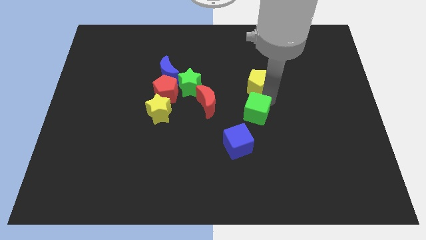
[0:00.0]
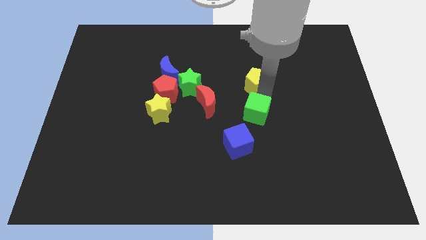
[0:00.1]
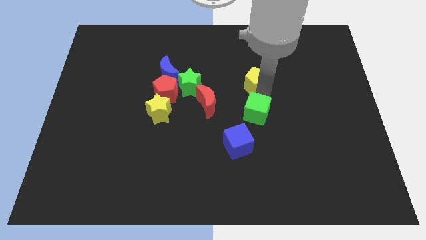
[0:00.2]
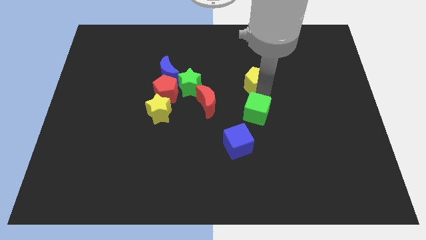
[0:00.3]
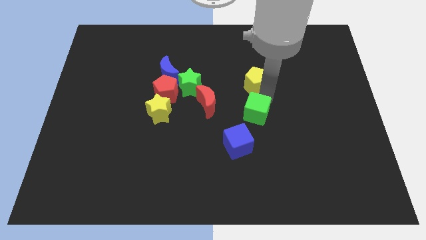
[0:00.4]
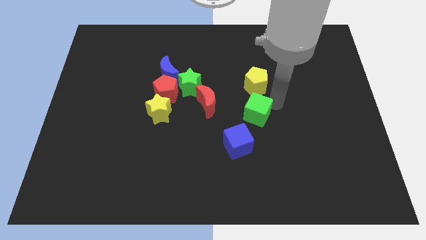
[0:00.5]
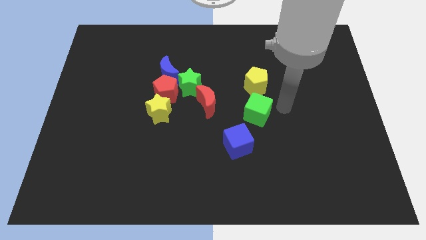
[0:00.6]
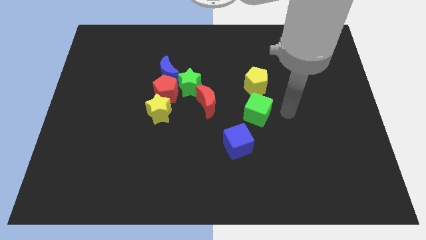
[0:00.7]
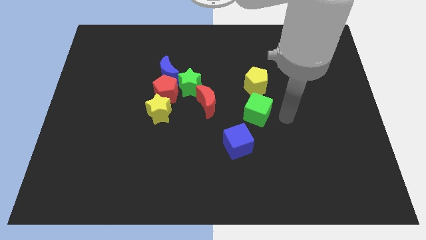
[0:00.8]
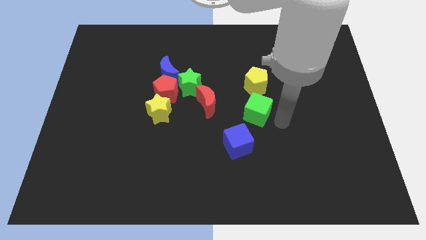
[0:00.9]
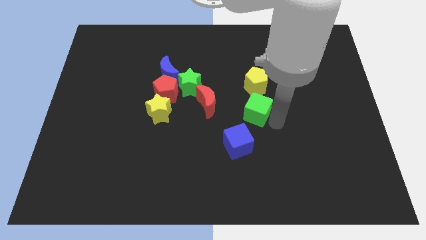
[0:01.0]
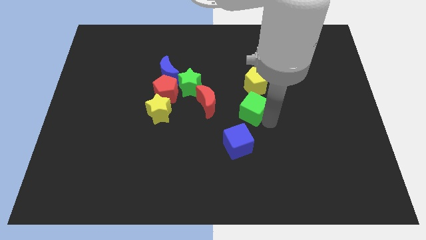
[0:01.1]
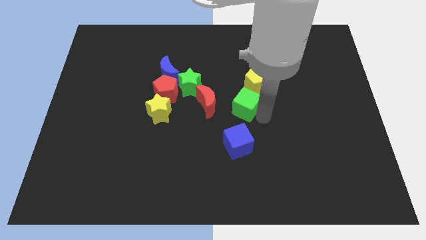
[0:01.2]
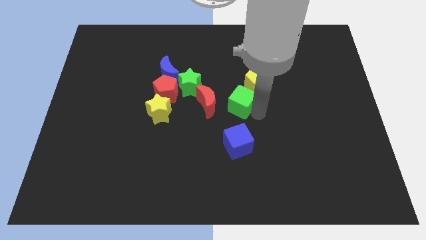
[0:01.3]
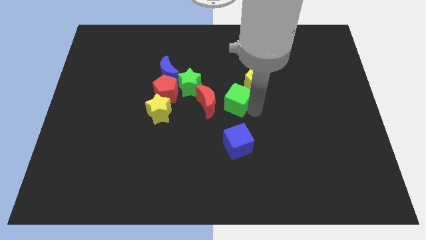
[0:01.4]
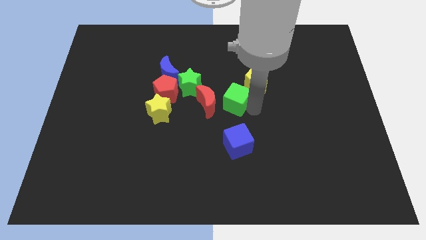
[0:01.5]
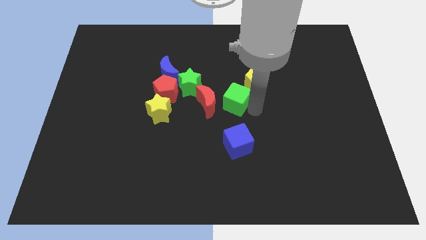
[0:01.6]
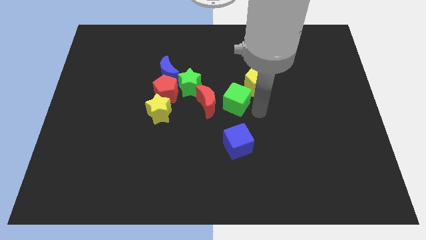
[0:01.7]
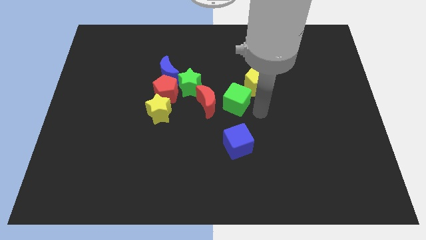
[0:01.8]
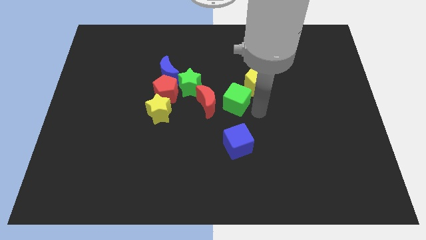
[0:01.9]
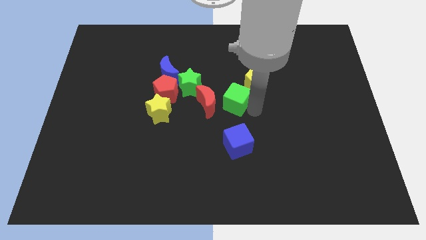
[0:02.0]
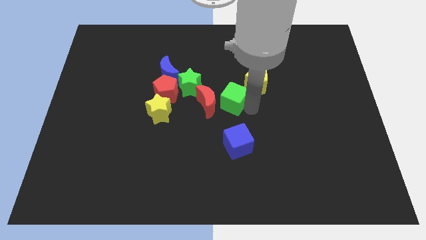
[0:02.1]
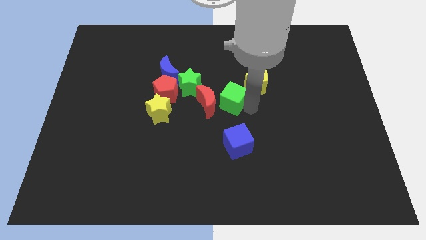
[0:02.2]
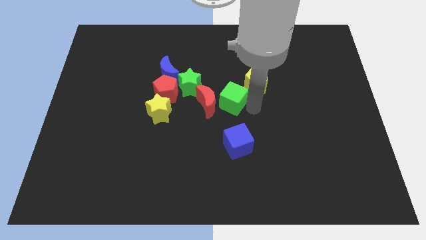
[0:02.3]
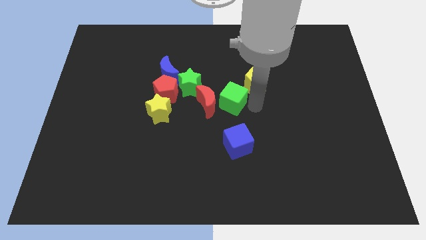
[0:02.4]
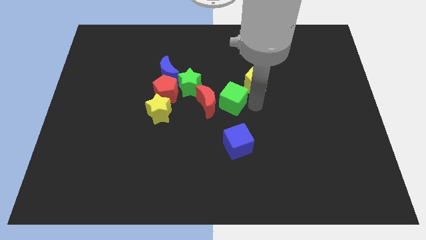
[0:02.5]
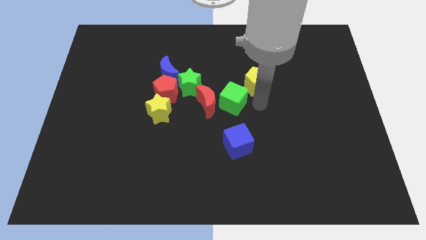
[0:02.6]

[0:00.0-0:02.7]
move the green cube in between red moon and yellow pentagon

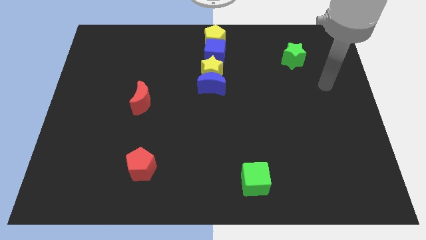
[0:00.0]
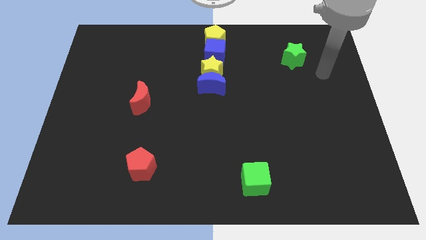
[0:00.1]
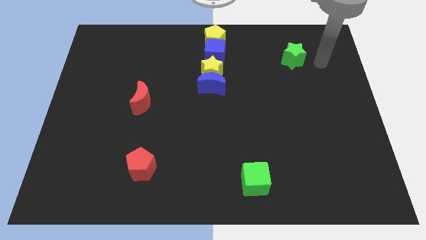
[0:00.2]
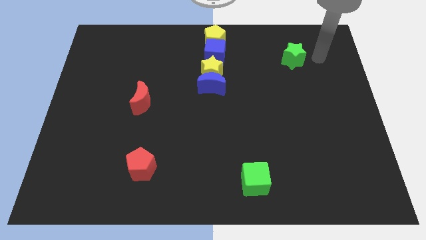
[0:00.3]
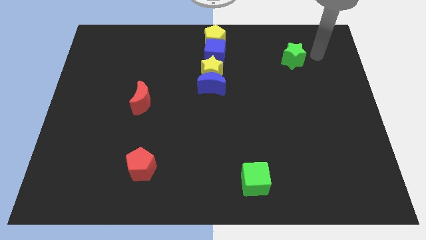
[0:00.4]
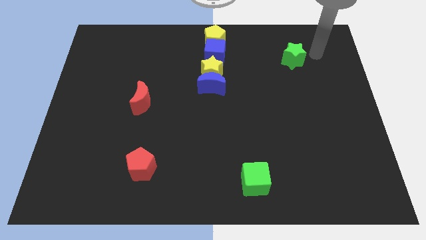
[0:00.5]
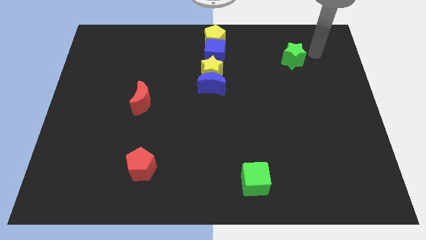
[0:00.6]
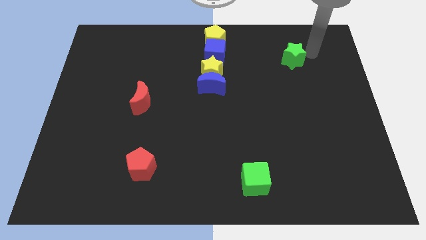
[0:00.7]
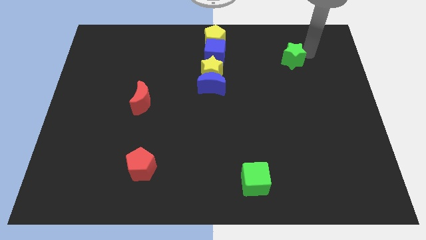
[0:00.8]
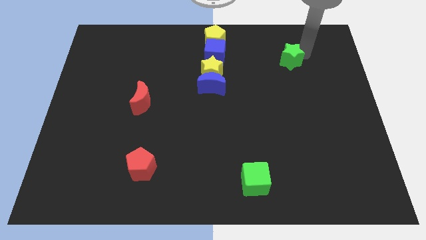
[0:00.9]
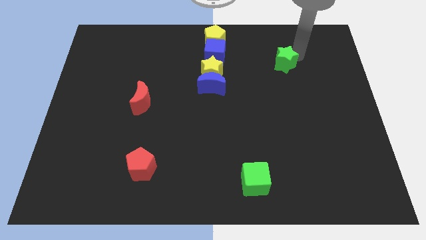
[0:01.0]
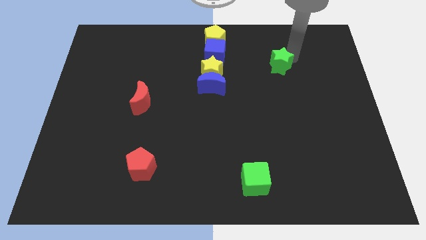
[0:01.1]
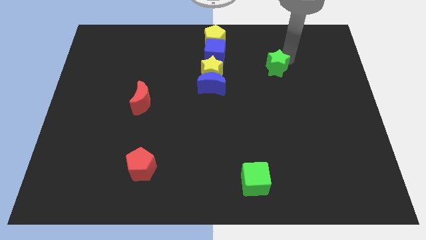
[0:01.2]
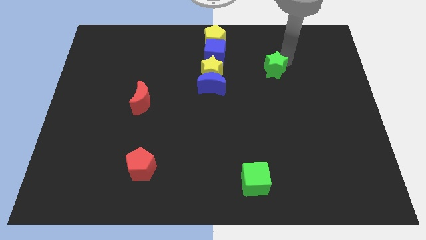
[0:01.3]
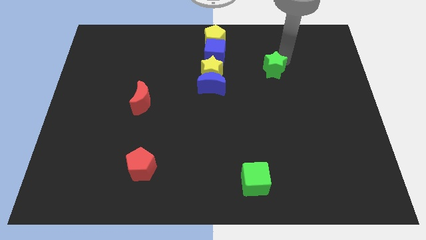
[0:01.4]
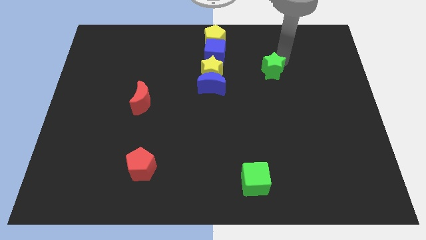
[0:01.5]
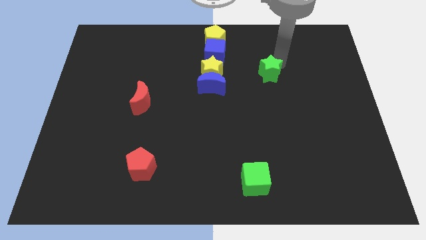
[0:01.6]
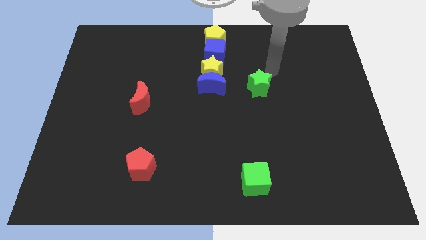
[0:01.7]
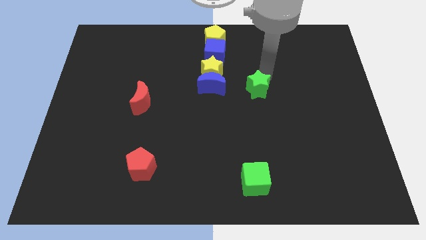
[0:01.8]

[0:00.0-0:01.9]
move the green star to the right of blue moon

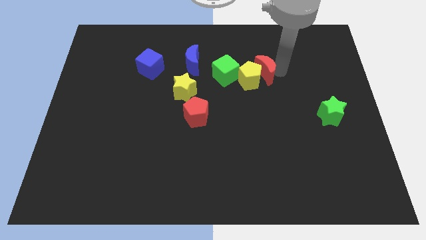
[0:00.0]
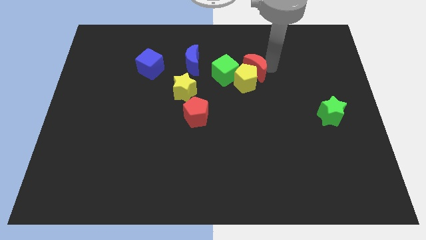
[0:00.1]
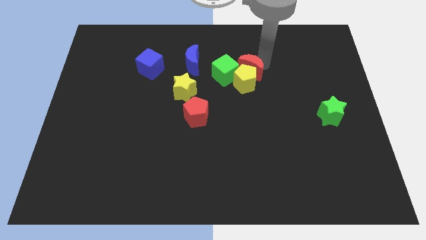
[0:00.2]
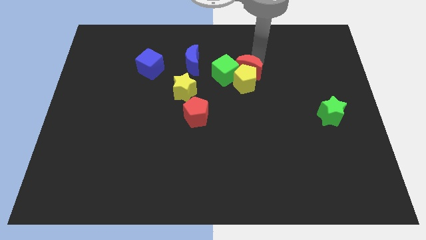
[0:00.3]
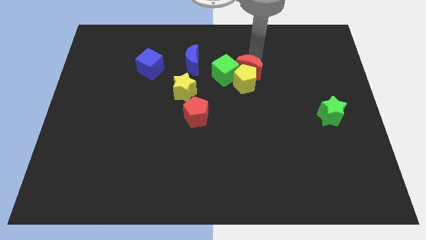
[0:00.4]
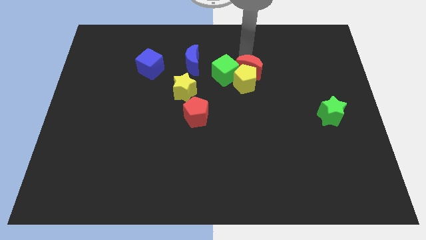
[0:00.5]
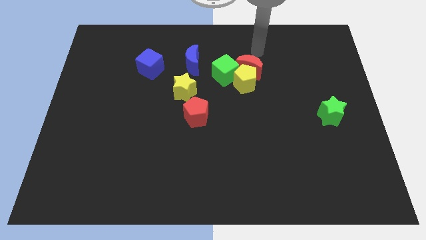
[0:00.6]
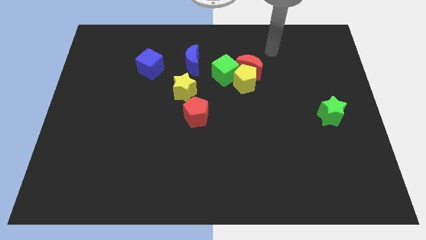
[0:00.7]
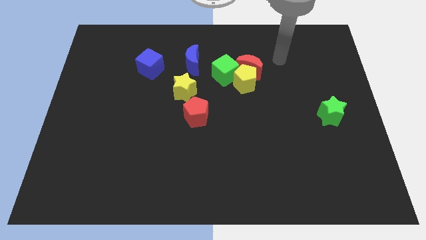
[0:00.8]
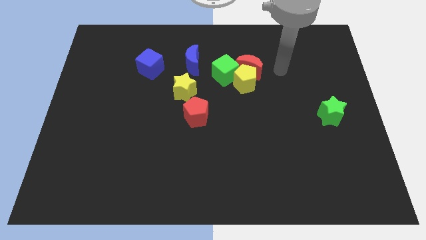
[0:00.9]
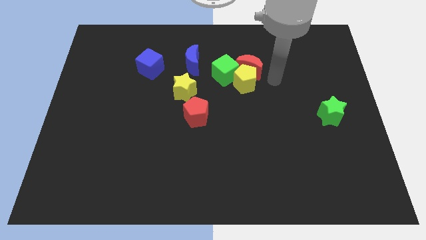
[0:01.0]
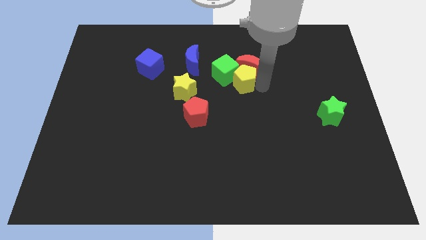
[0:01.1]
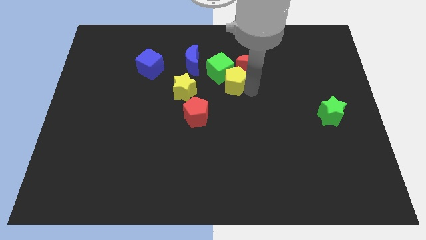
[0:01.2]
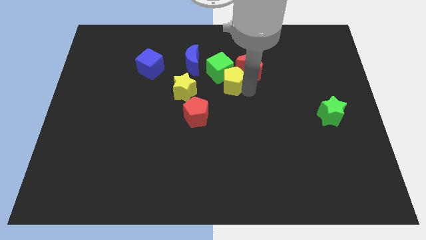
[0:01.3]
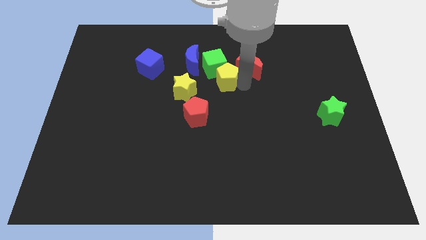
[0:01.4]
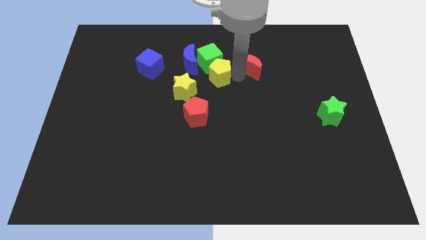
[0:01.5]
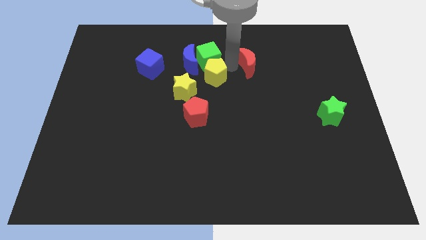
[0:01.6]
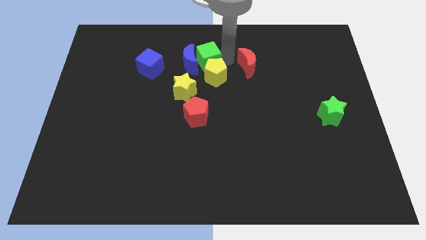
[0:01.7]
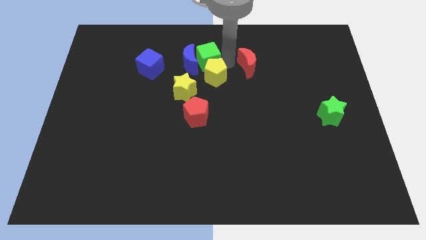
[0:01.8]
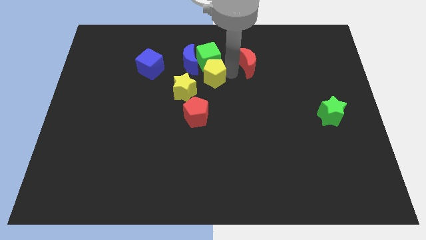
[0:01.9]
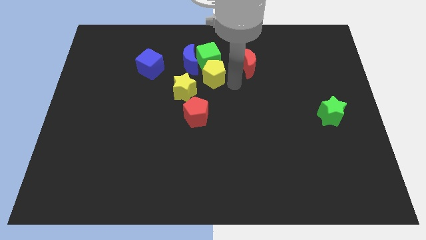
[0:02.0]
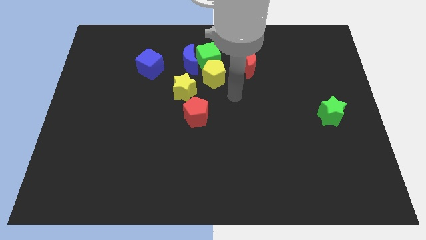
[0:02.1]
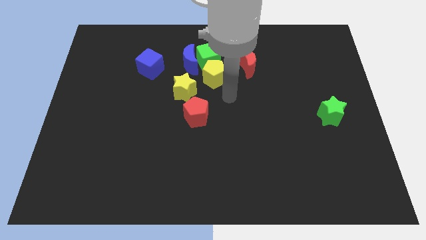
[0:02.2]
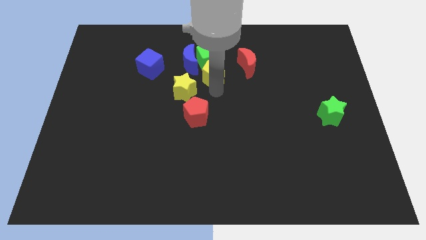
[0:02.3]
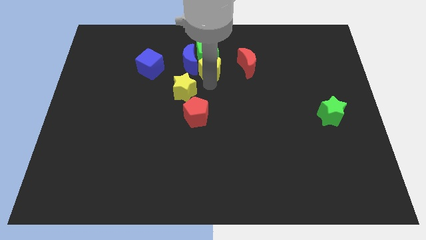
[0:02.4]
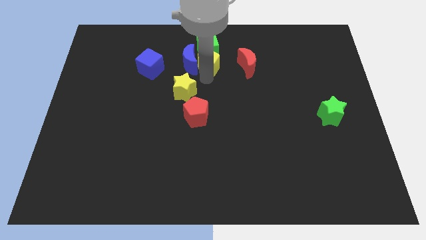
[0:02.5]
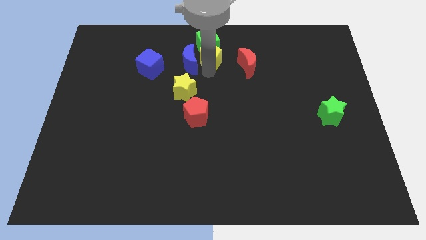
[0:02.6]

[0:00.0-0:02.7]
move yellow pentagon and green cube towards top of the board

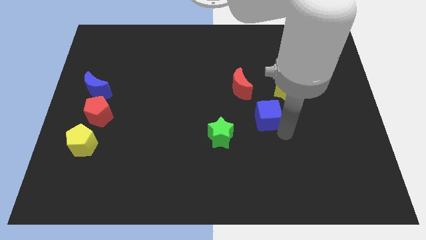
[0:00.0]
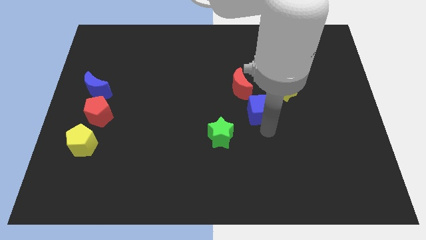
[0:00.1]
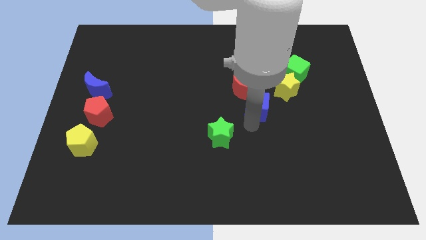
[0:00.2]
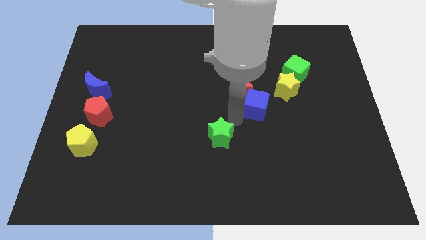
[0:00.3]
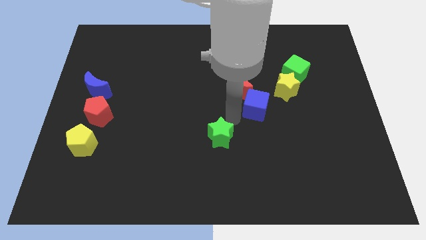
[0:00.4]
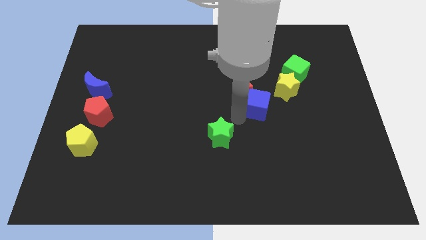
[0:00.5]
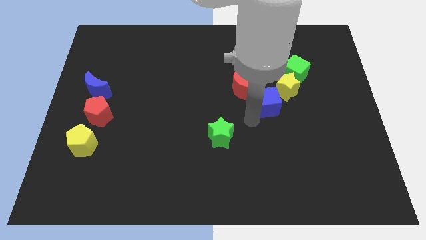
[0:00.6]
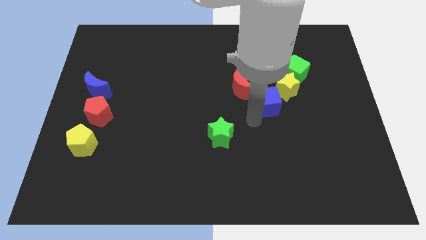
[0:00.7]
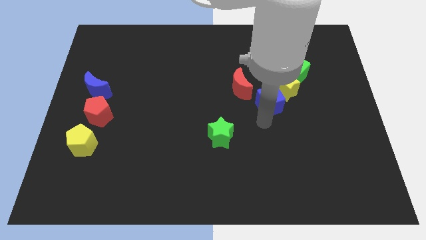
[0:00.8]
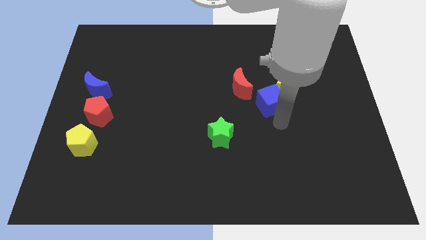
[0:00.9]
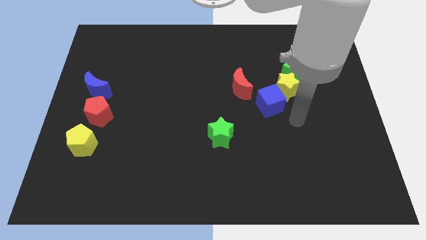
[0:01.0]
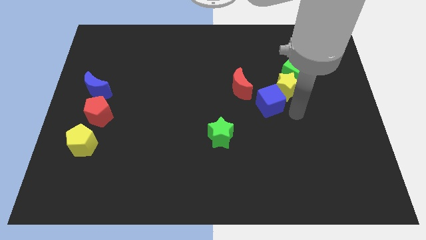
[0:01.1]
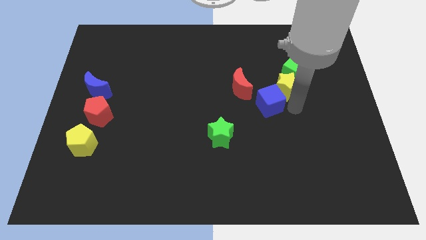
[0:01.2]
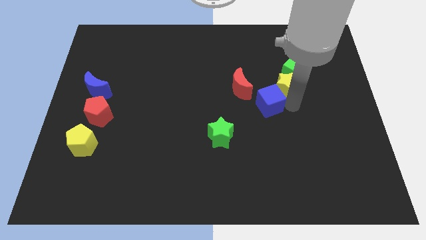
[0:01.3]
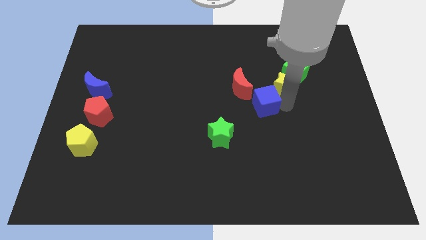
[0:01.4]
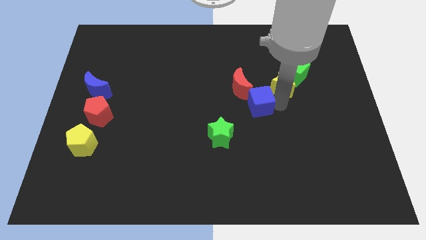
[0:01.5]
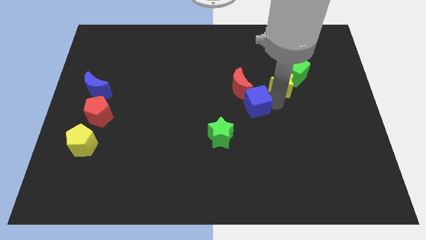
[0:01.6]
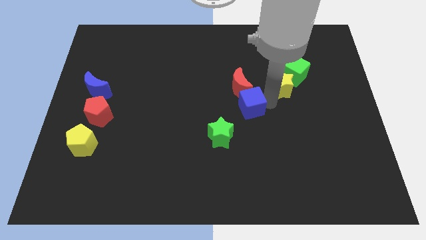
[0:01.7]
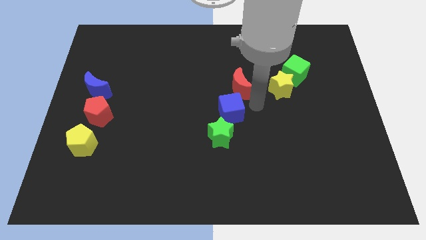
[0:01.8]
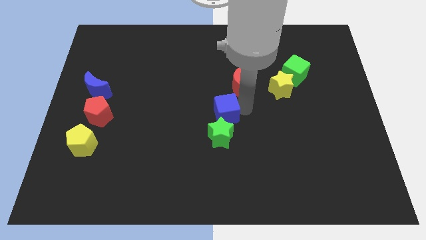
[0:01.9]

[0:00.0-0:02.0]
move the blue cube to the top of the green star
